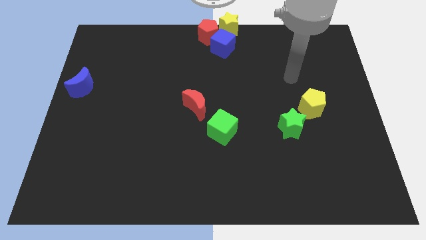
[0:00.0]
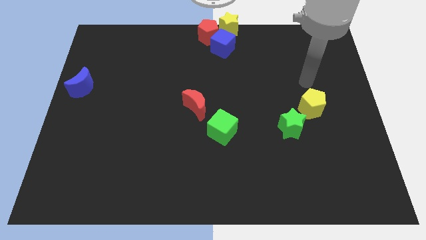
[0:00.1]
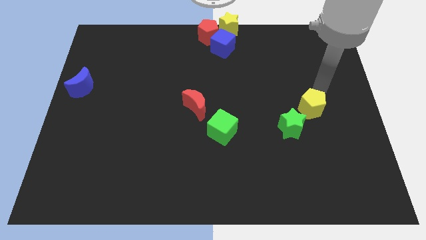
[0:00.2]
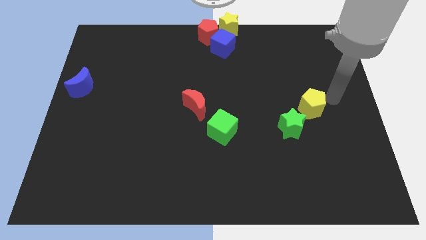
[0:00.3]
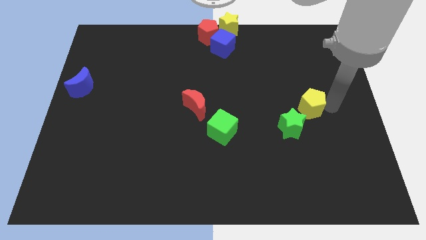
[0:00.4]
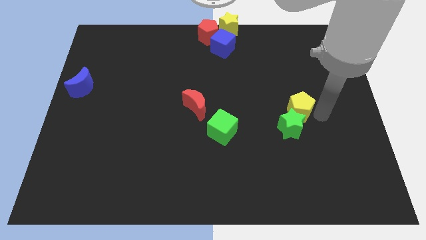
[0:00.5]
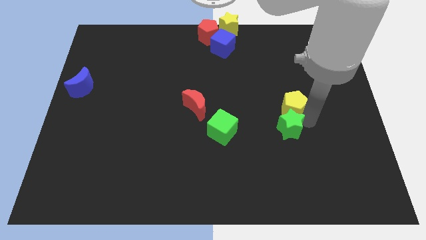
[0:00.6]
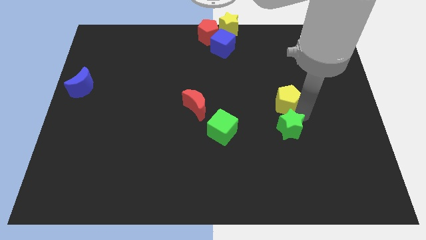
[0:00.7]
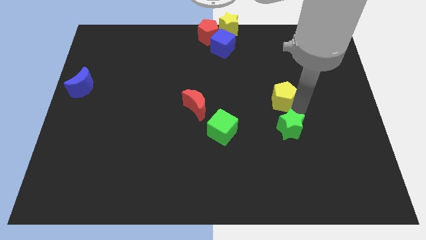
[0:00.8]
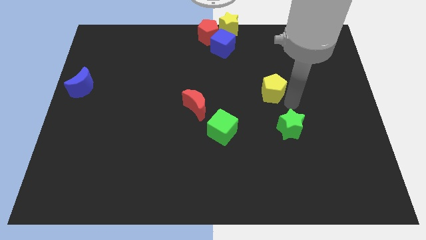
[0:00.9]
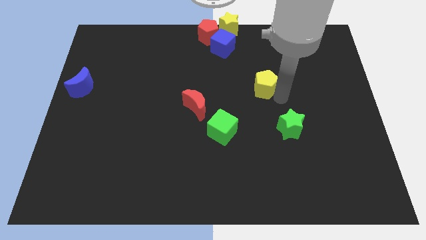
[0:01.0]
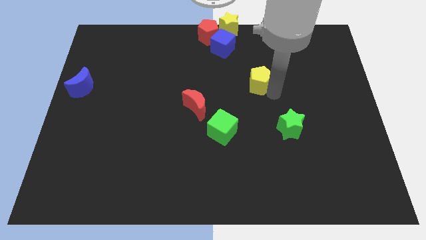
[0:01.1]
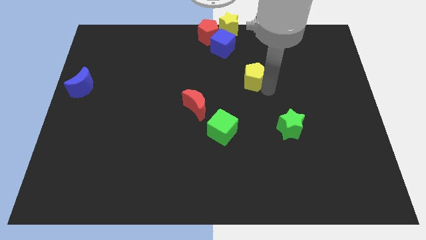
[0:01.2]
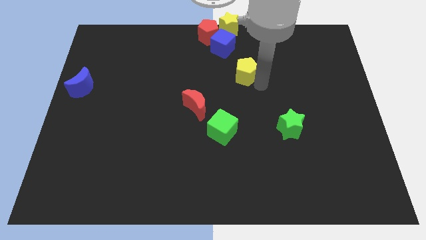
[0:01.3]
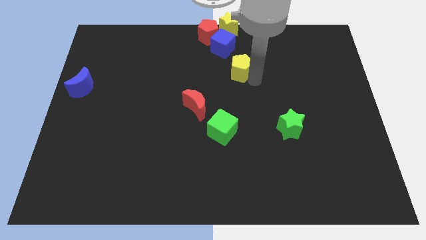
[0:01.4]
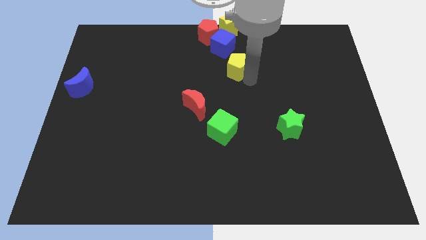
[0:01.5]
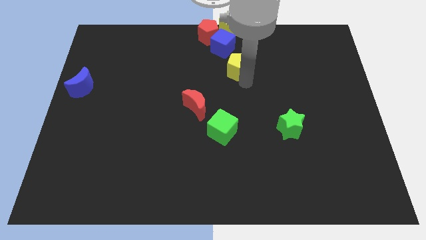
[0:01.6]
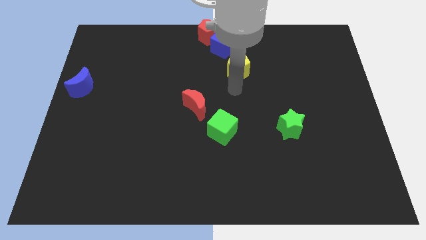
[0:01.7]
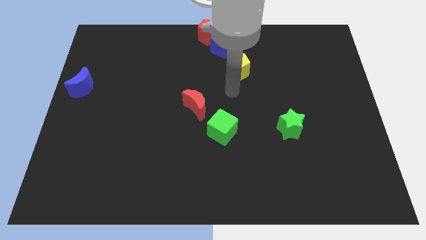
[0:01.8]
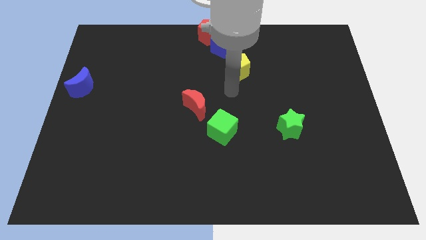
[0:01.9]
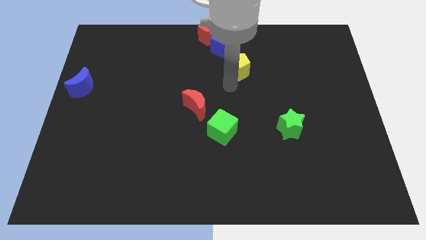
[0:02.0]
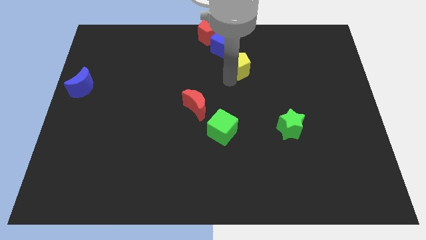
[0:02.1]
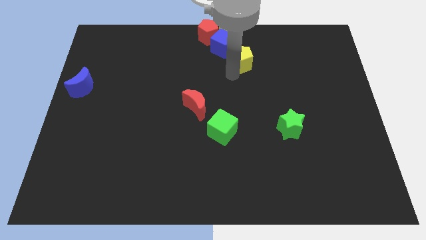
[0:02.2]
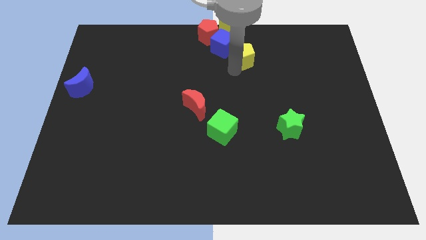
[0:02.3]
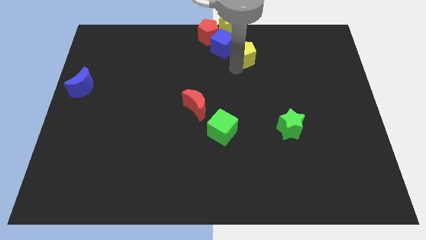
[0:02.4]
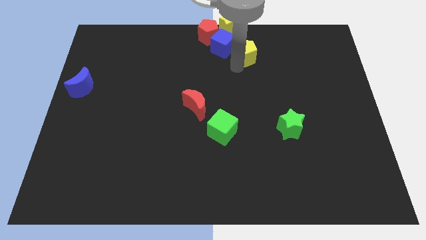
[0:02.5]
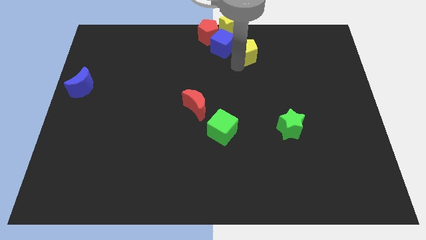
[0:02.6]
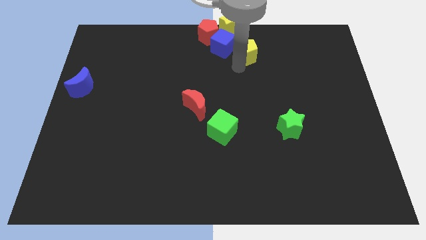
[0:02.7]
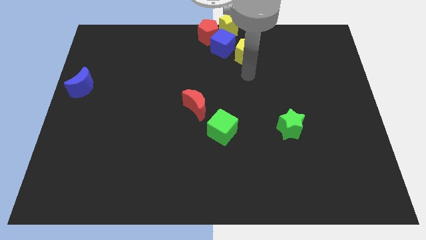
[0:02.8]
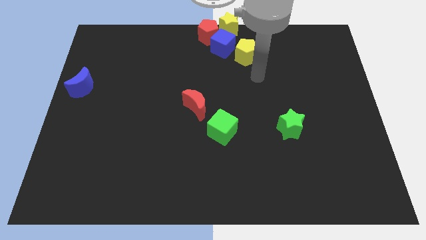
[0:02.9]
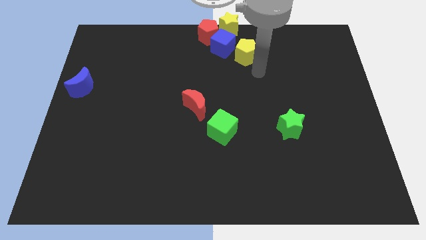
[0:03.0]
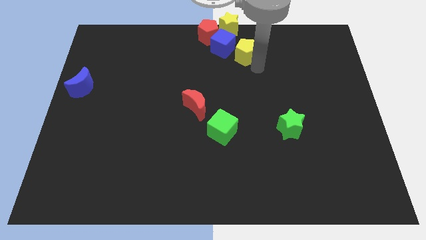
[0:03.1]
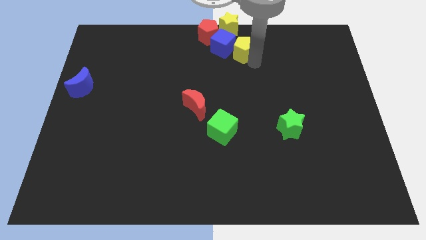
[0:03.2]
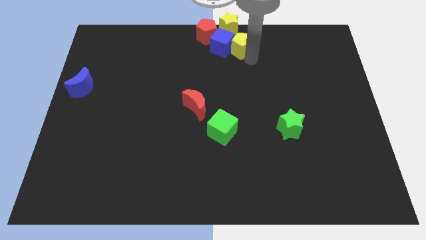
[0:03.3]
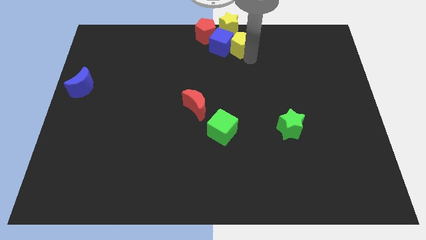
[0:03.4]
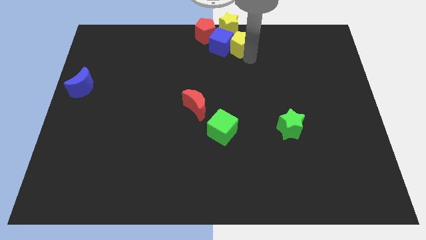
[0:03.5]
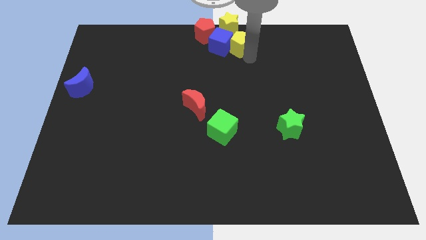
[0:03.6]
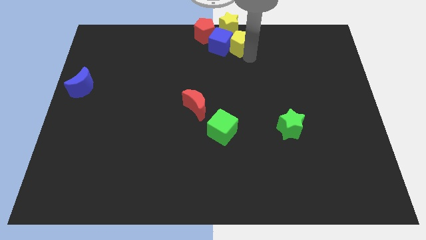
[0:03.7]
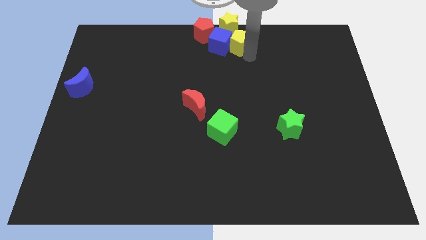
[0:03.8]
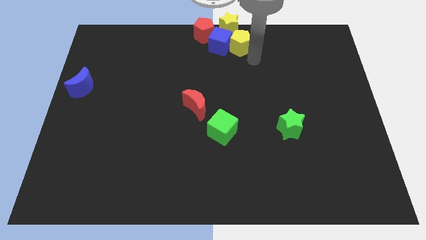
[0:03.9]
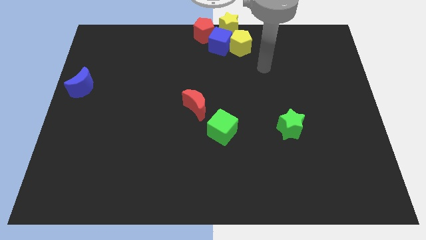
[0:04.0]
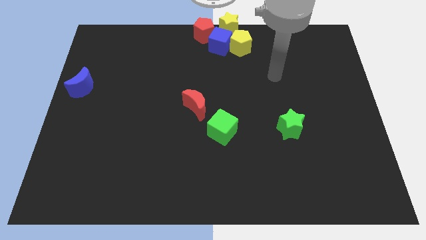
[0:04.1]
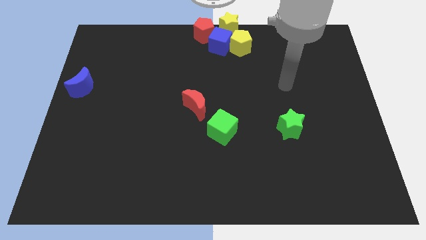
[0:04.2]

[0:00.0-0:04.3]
push the yellow pentagon into the blue cube

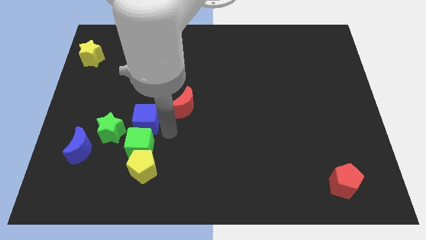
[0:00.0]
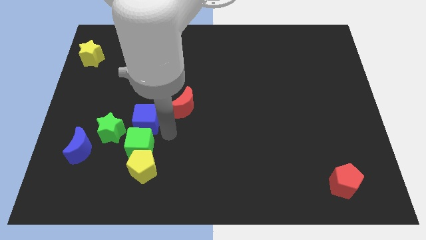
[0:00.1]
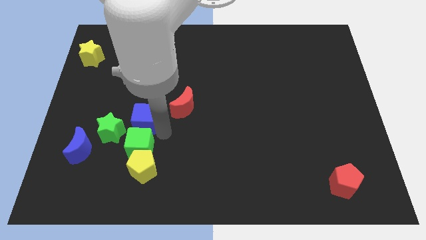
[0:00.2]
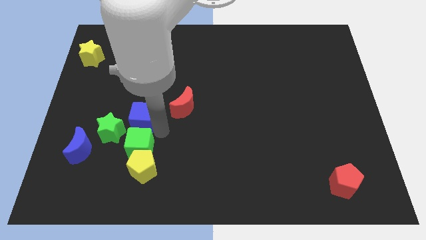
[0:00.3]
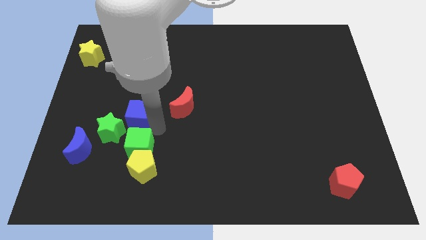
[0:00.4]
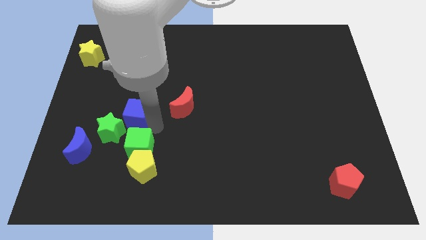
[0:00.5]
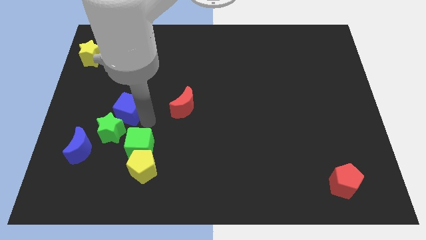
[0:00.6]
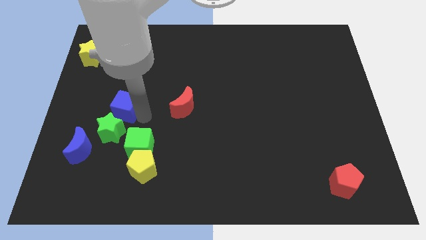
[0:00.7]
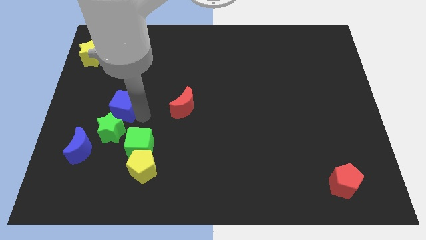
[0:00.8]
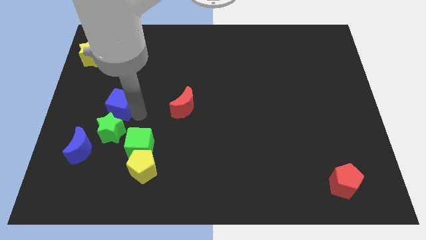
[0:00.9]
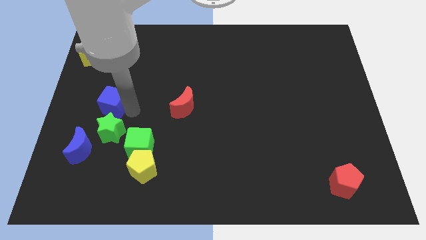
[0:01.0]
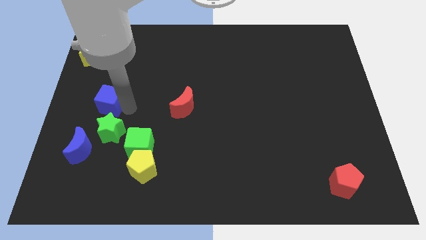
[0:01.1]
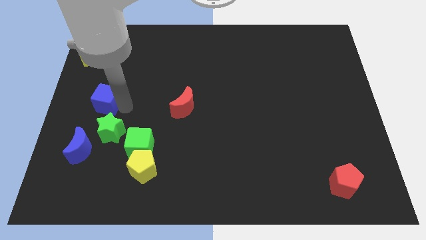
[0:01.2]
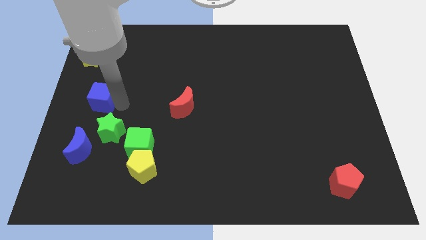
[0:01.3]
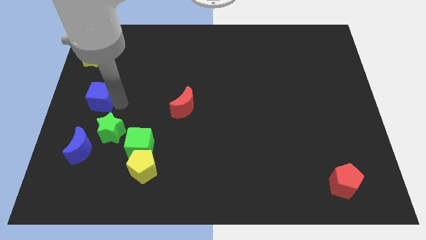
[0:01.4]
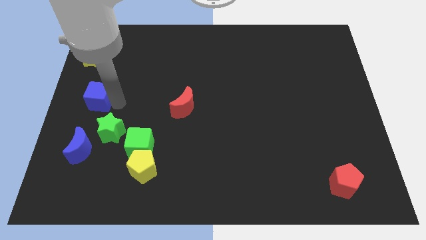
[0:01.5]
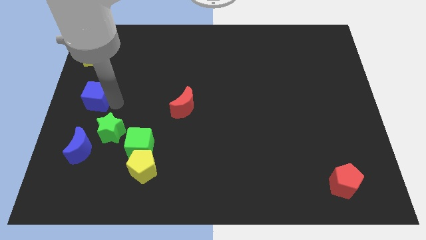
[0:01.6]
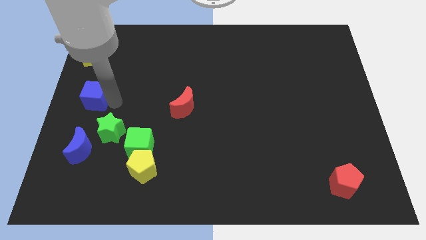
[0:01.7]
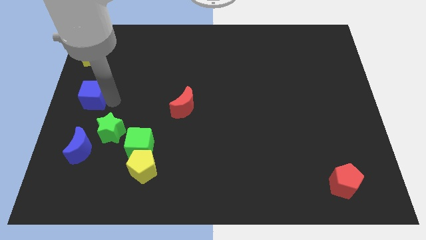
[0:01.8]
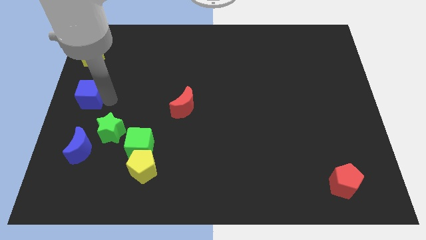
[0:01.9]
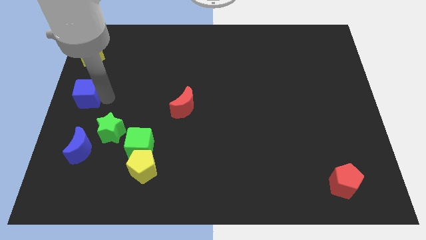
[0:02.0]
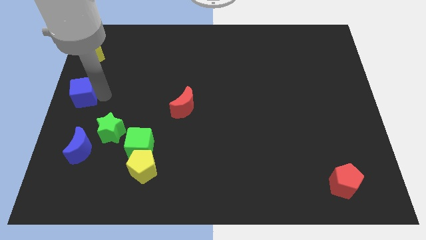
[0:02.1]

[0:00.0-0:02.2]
put the blue cube vertically above the blue moon

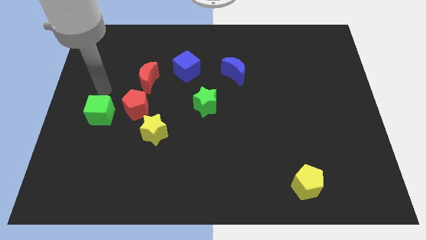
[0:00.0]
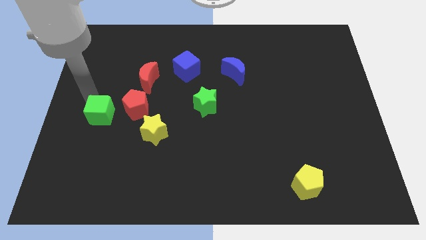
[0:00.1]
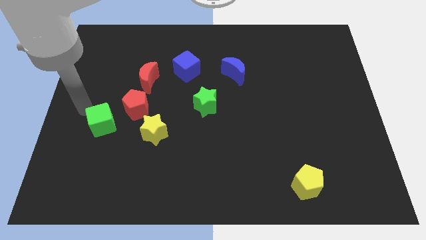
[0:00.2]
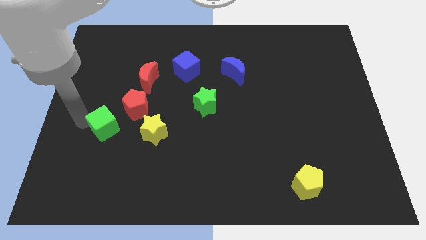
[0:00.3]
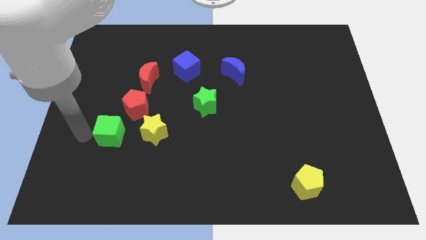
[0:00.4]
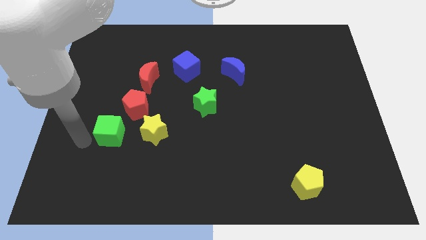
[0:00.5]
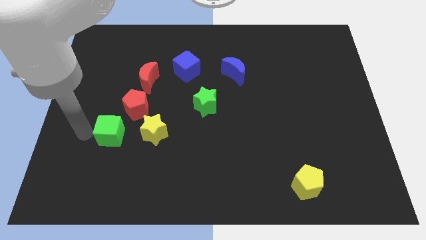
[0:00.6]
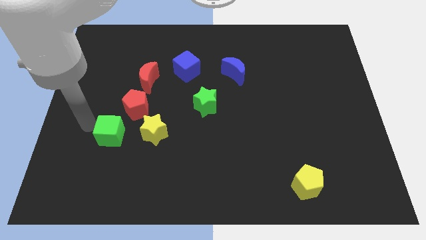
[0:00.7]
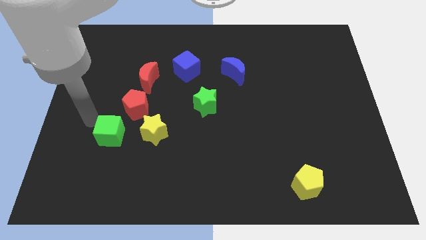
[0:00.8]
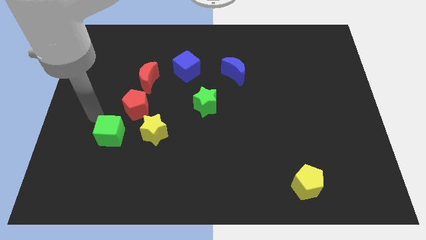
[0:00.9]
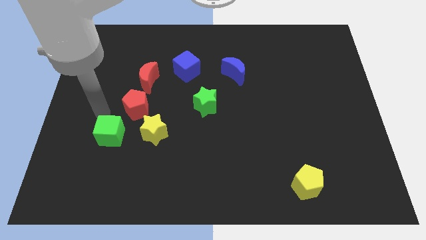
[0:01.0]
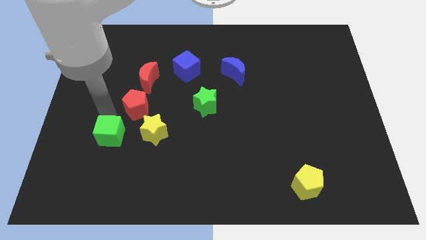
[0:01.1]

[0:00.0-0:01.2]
place the green cube left to the yellow star

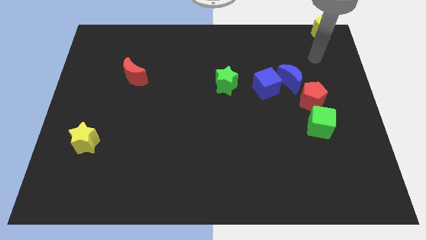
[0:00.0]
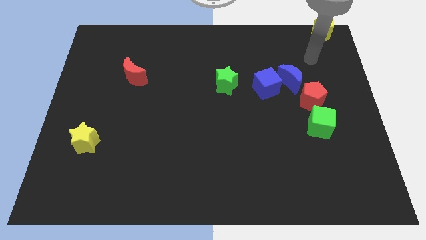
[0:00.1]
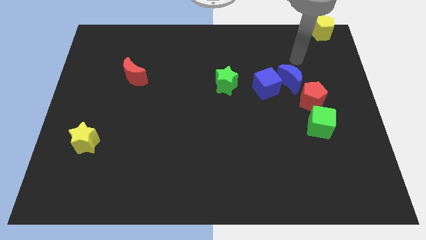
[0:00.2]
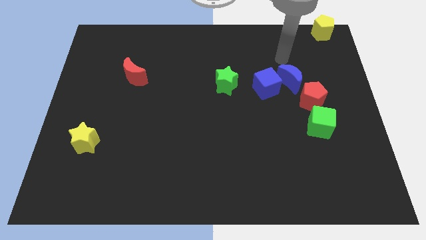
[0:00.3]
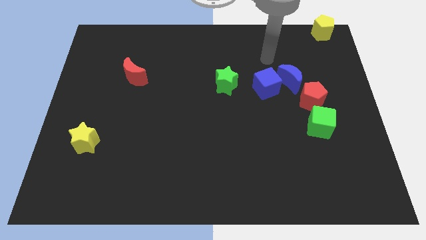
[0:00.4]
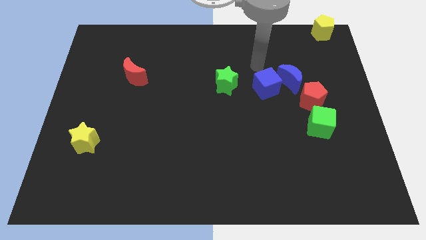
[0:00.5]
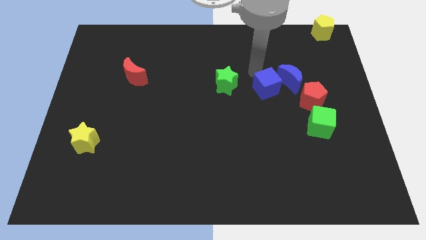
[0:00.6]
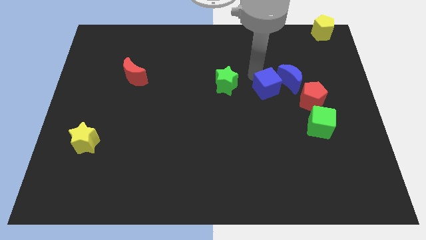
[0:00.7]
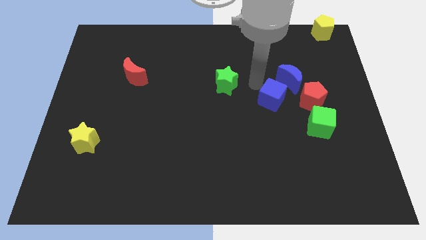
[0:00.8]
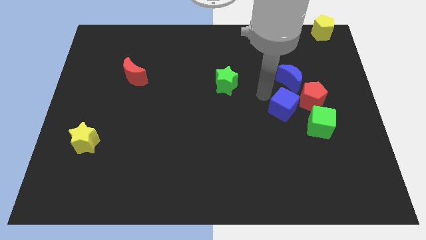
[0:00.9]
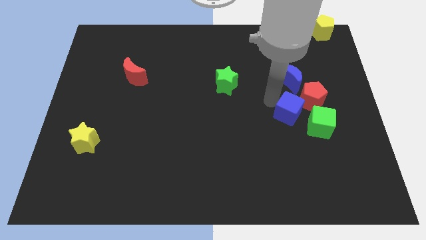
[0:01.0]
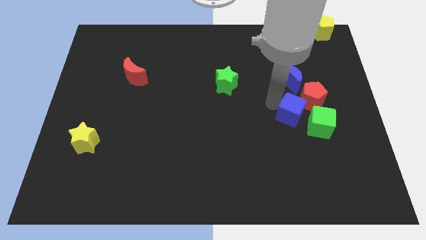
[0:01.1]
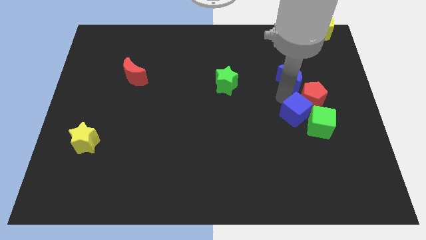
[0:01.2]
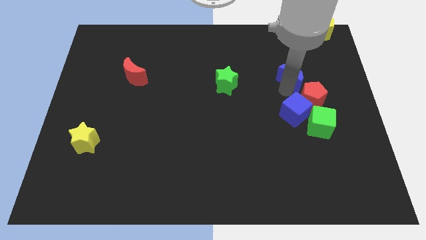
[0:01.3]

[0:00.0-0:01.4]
place blue cube to the left of green cube
